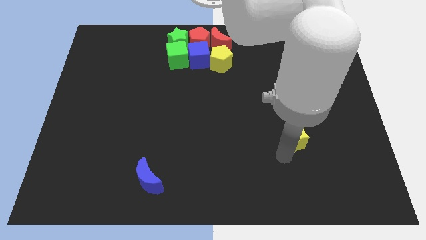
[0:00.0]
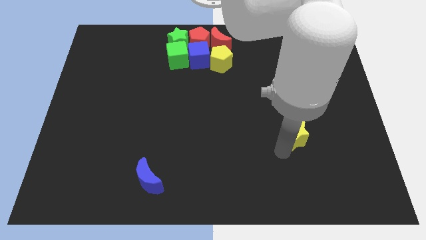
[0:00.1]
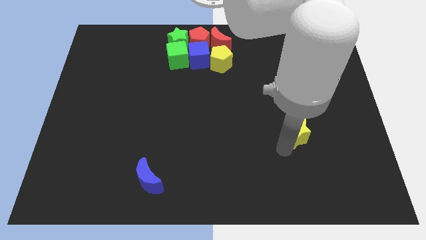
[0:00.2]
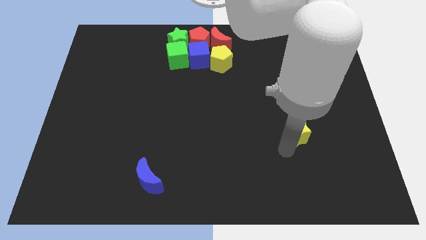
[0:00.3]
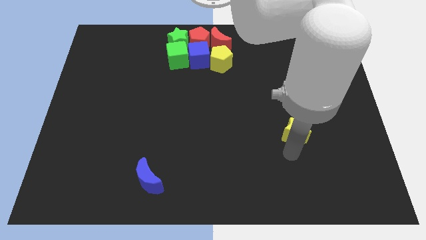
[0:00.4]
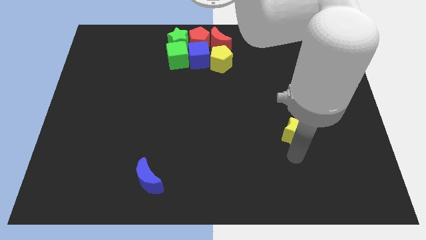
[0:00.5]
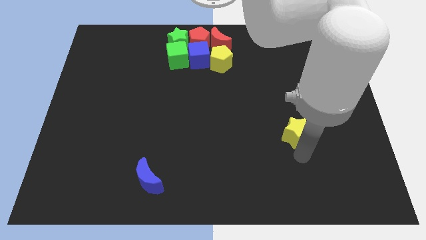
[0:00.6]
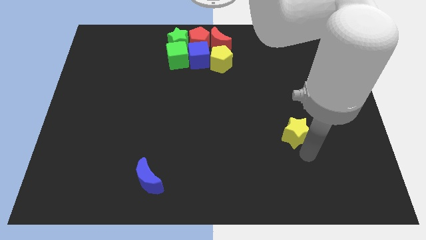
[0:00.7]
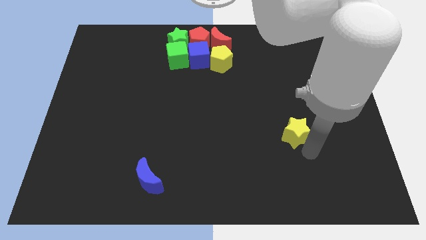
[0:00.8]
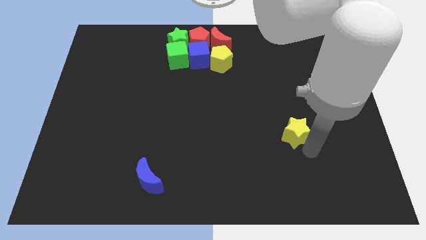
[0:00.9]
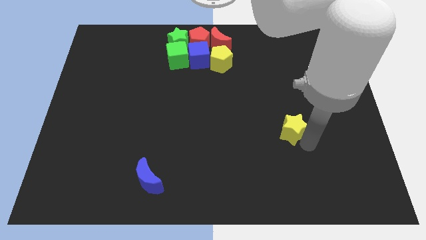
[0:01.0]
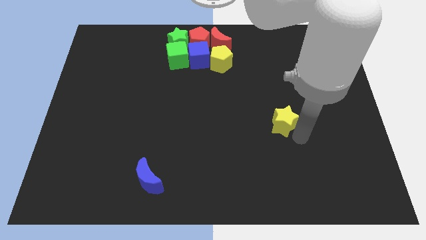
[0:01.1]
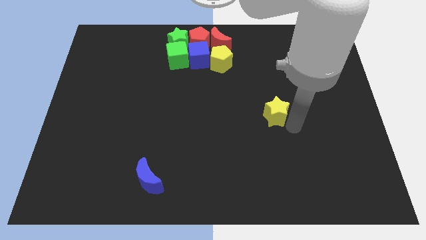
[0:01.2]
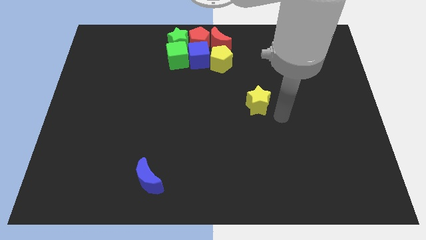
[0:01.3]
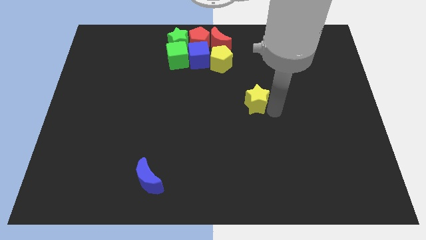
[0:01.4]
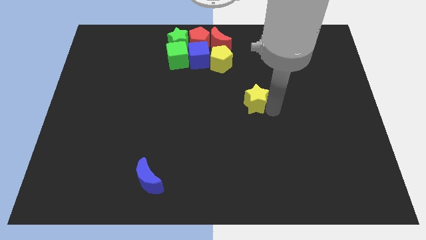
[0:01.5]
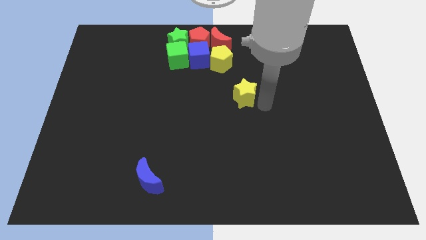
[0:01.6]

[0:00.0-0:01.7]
move the yellow star diagonally to yellow pentagon

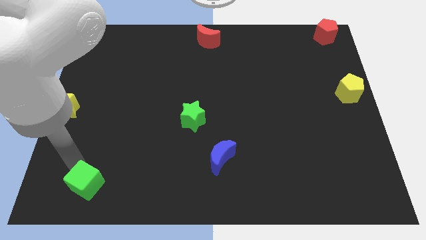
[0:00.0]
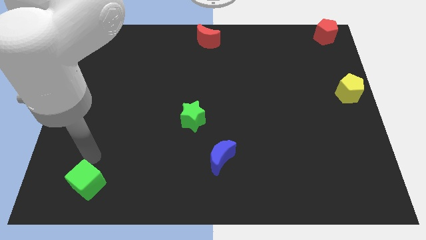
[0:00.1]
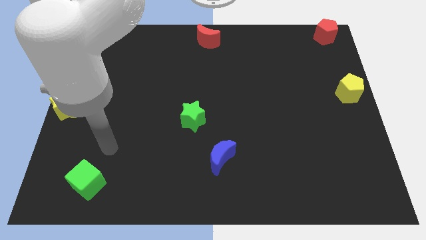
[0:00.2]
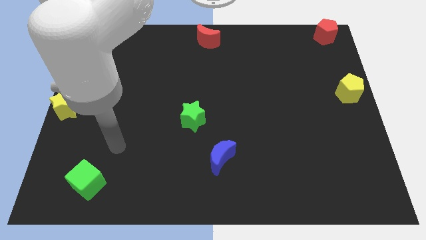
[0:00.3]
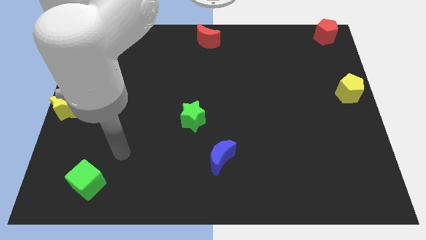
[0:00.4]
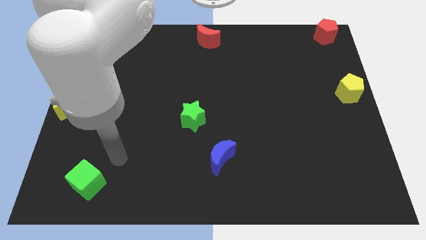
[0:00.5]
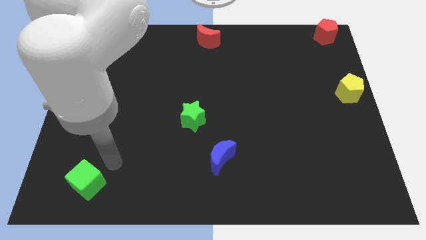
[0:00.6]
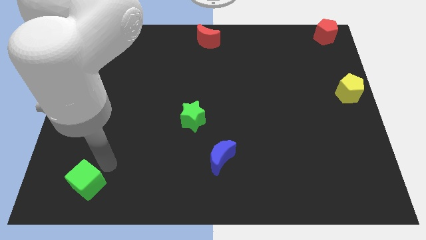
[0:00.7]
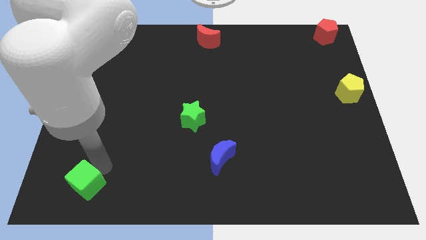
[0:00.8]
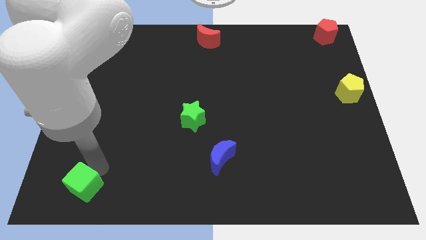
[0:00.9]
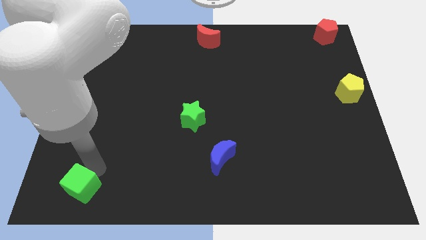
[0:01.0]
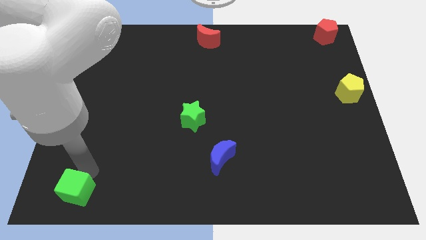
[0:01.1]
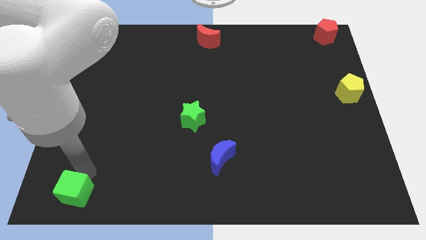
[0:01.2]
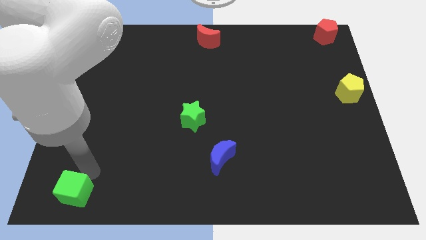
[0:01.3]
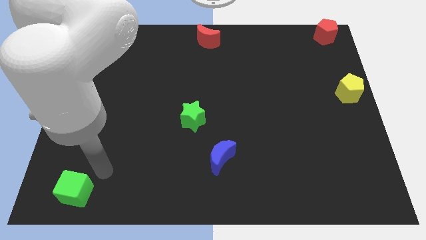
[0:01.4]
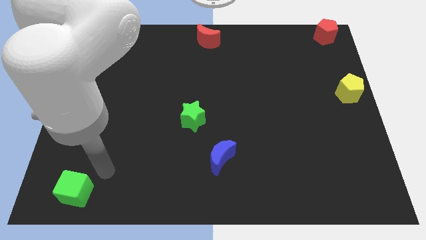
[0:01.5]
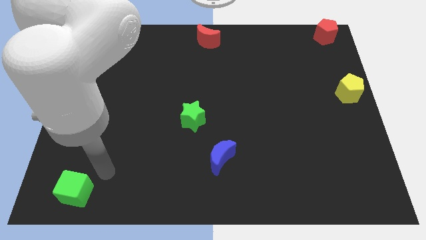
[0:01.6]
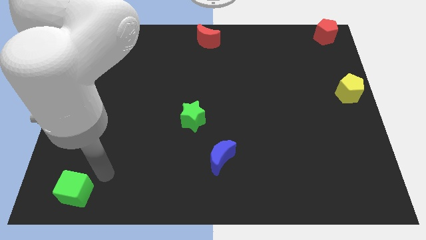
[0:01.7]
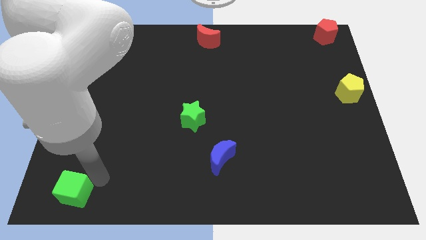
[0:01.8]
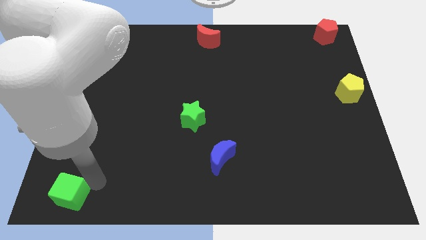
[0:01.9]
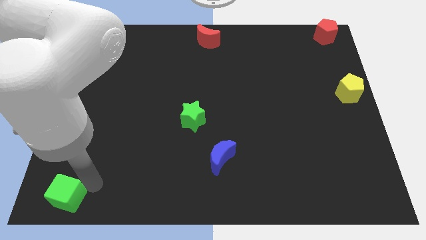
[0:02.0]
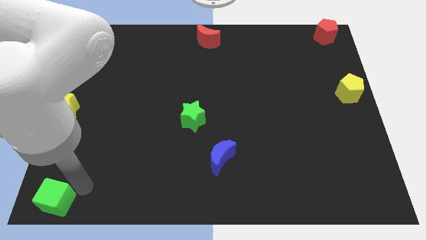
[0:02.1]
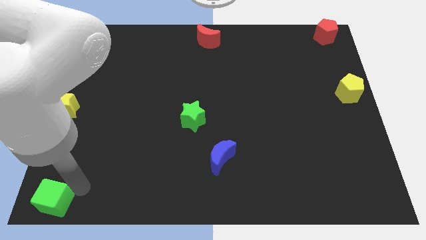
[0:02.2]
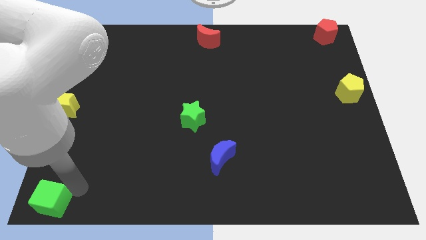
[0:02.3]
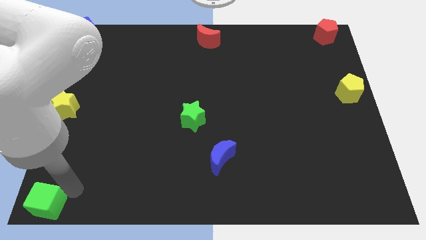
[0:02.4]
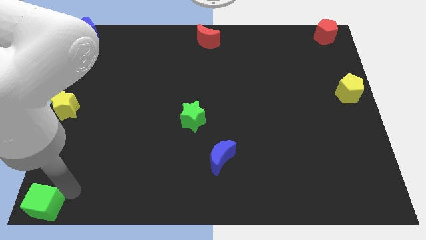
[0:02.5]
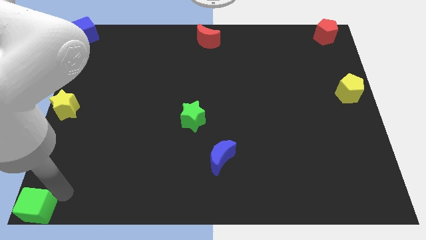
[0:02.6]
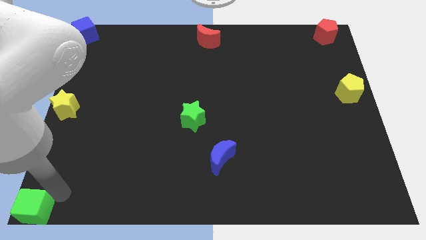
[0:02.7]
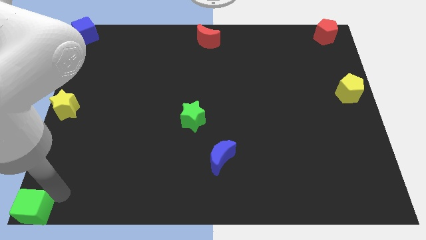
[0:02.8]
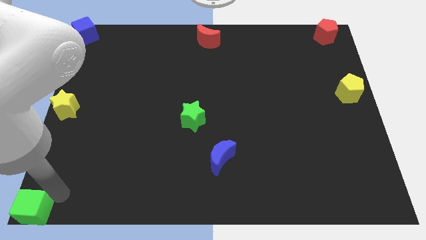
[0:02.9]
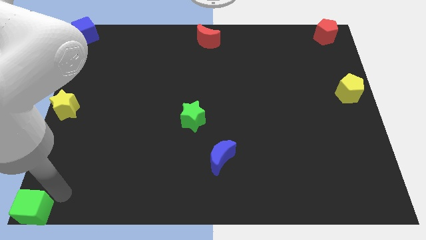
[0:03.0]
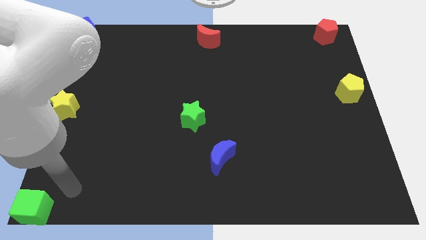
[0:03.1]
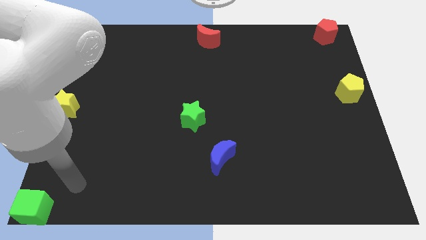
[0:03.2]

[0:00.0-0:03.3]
put the green cube at the bottom left corner of the board

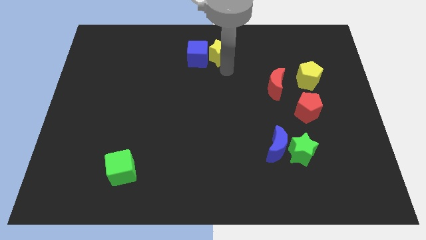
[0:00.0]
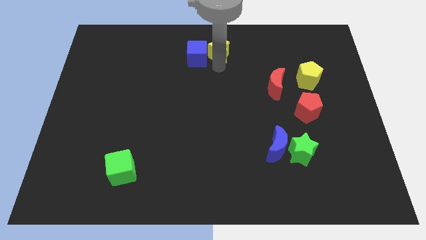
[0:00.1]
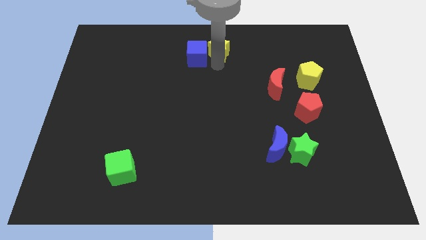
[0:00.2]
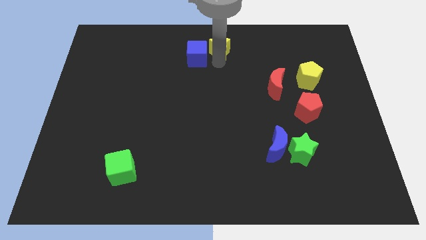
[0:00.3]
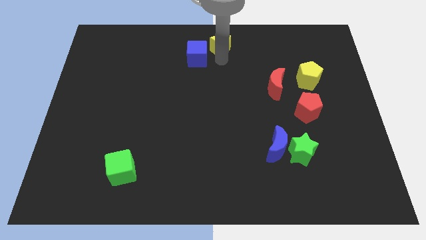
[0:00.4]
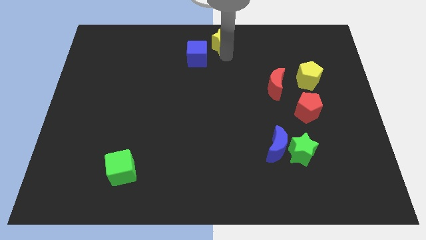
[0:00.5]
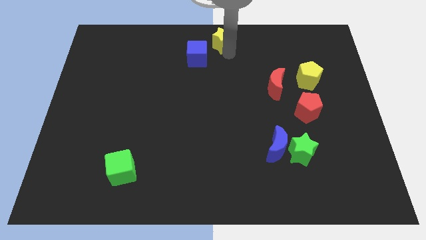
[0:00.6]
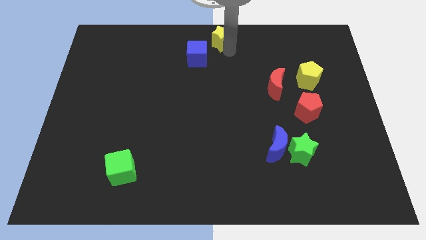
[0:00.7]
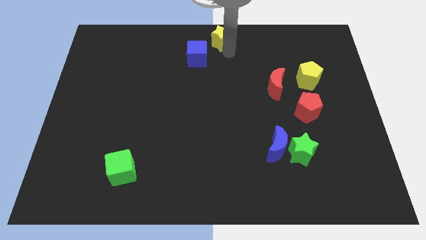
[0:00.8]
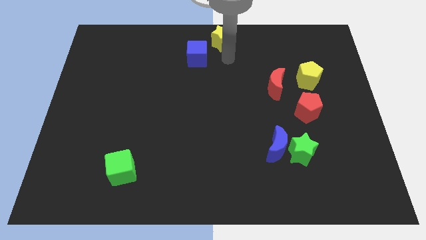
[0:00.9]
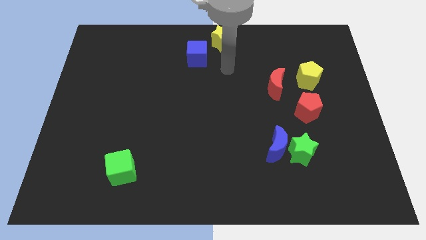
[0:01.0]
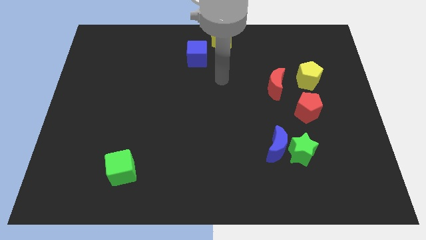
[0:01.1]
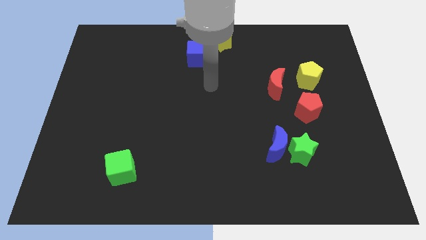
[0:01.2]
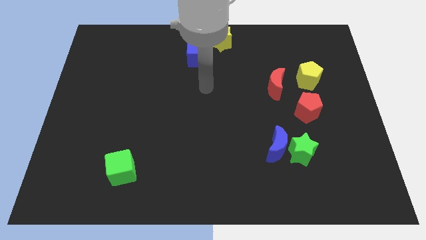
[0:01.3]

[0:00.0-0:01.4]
push the yellow star to the top center of the board

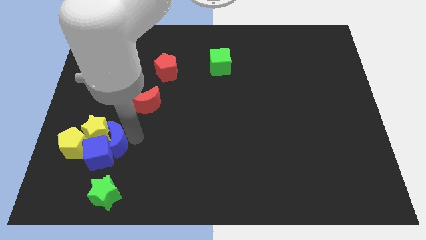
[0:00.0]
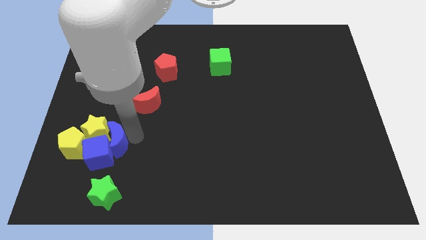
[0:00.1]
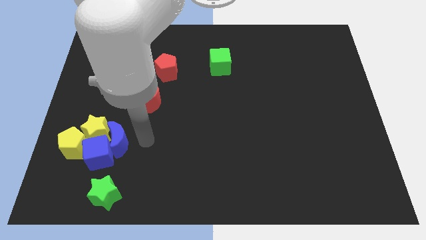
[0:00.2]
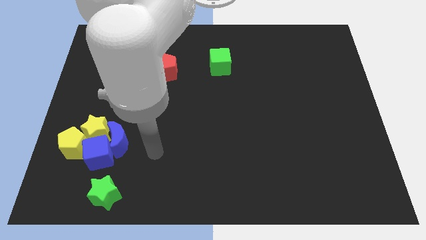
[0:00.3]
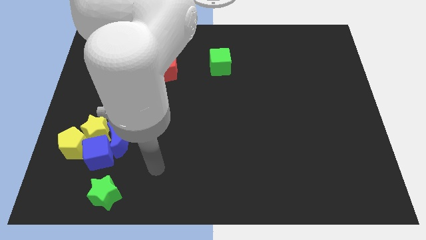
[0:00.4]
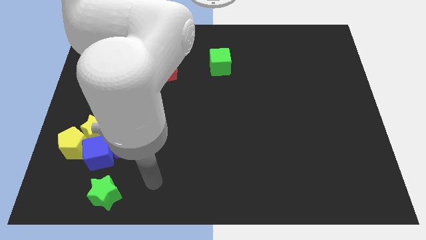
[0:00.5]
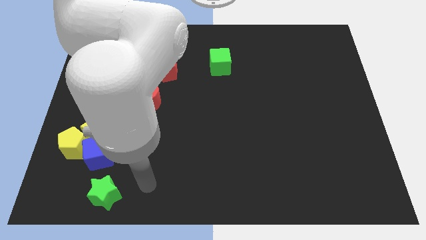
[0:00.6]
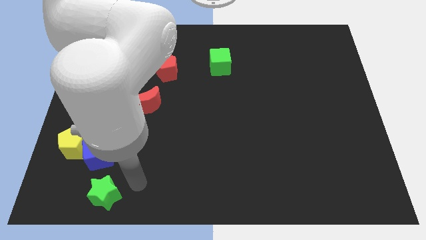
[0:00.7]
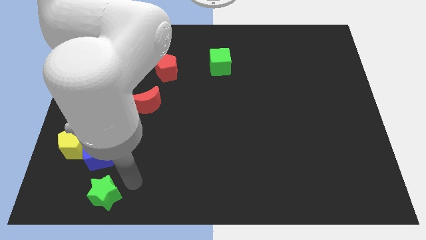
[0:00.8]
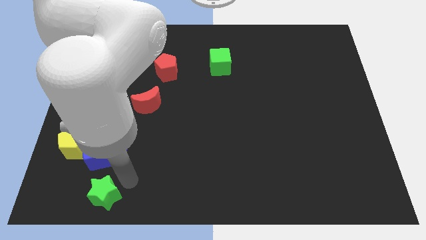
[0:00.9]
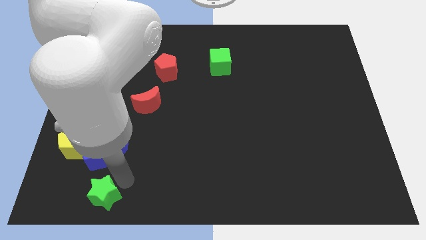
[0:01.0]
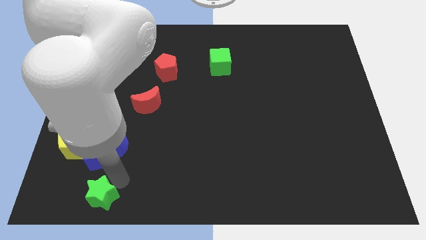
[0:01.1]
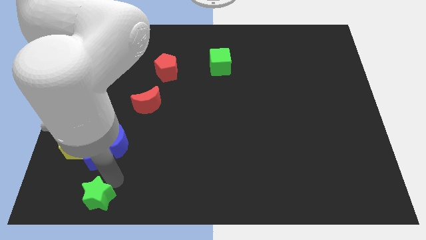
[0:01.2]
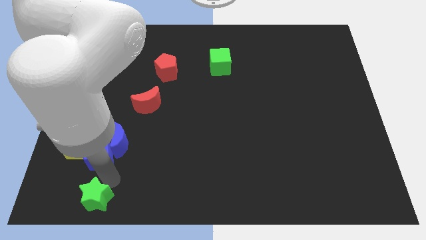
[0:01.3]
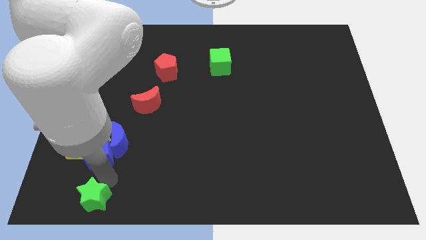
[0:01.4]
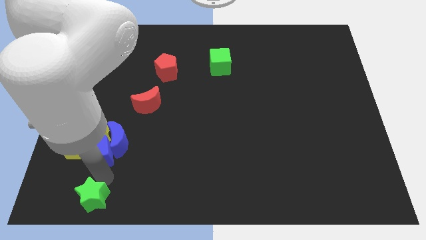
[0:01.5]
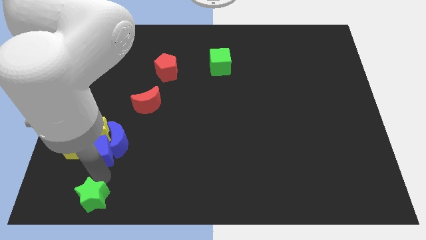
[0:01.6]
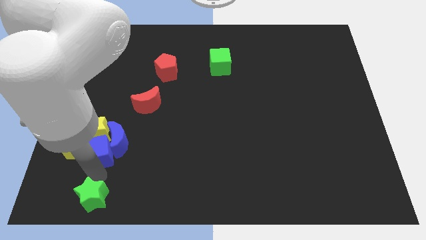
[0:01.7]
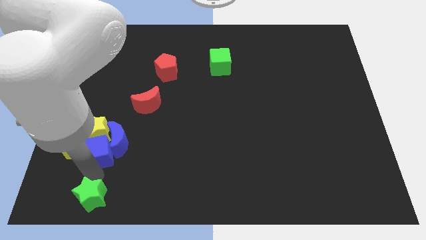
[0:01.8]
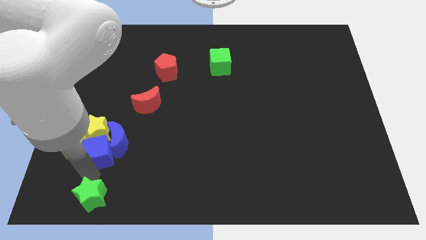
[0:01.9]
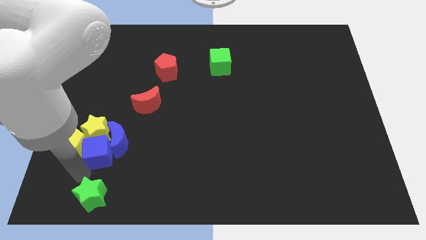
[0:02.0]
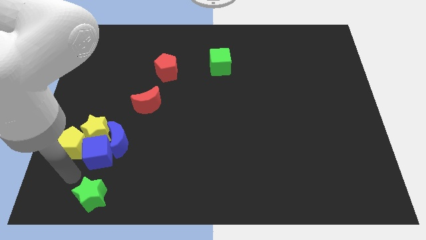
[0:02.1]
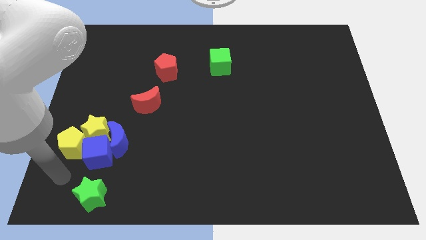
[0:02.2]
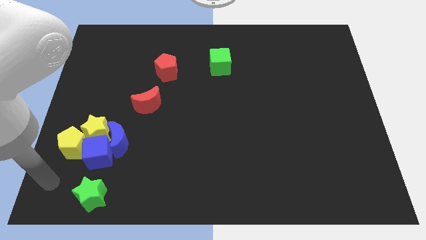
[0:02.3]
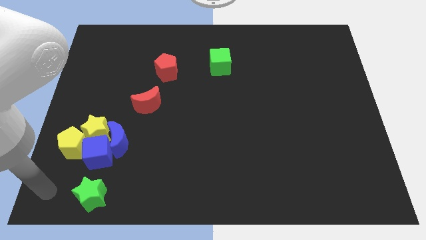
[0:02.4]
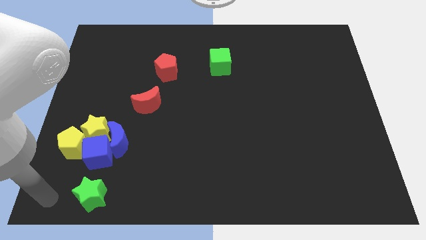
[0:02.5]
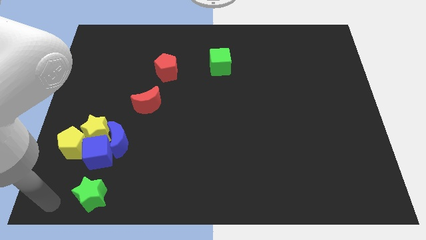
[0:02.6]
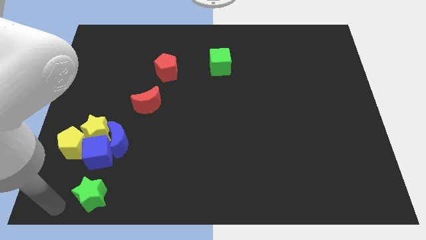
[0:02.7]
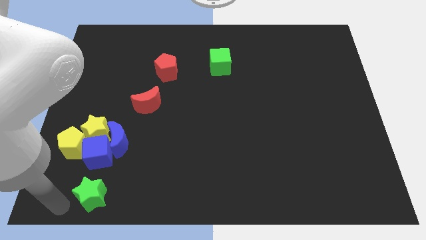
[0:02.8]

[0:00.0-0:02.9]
place green star to the left bottom
